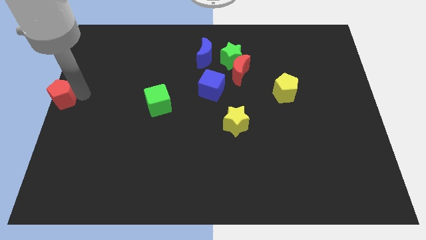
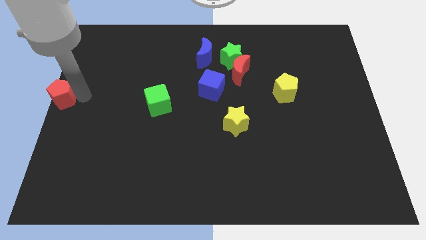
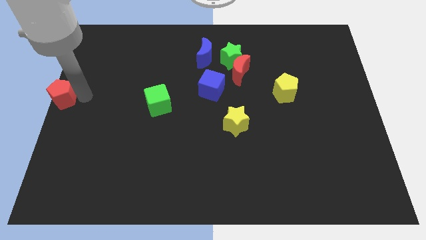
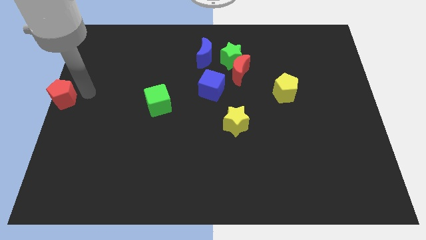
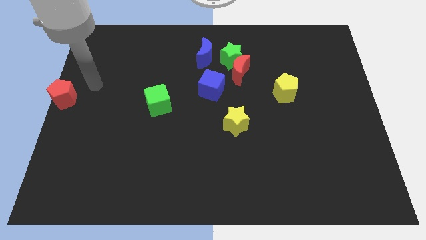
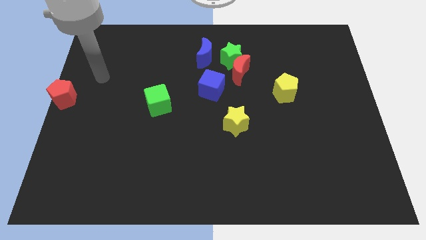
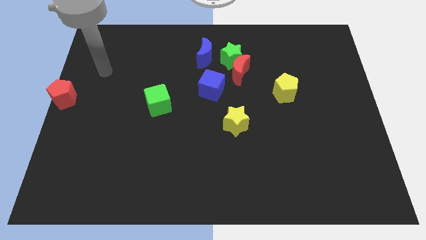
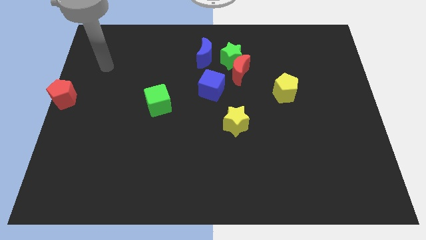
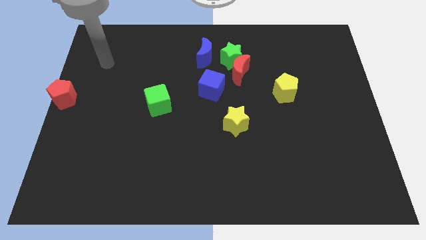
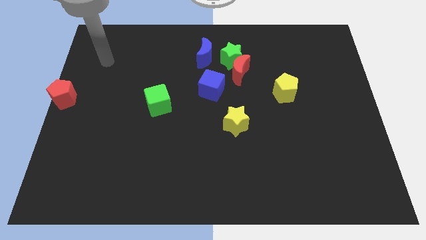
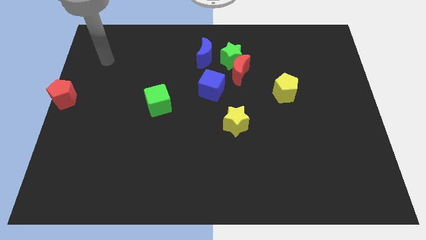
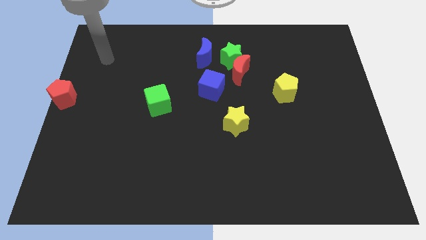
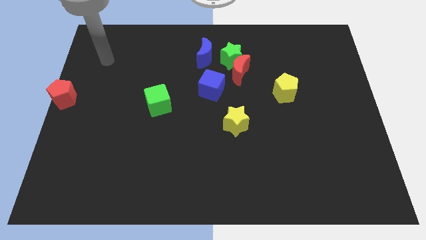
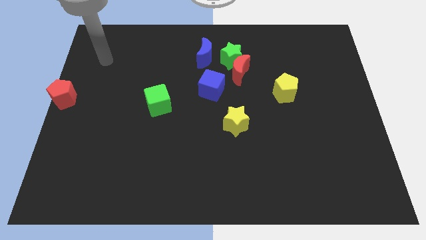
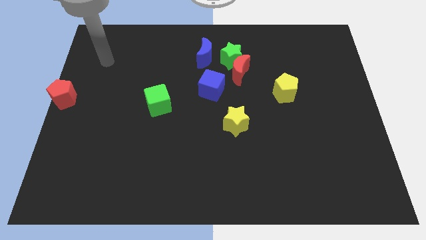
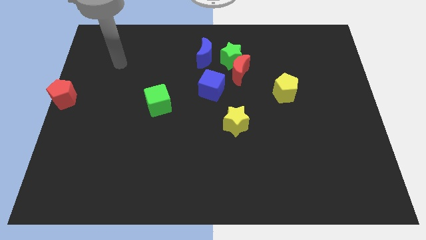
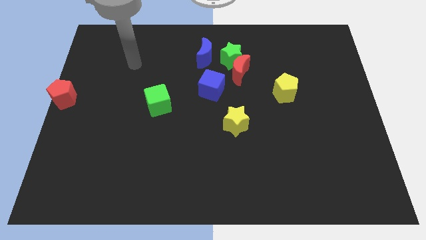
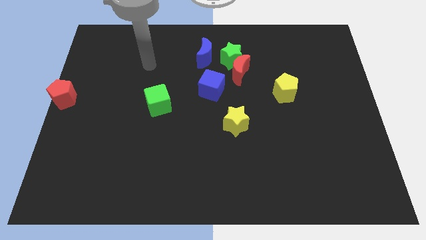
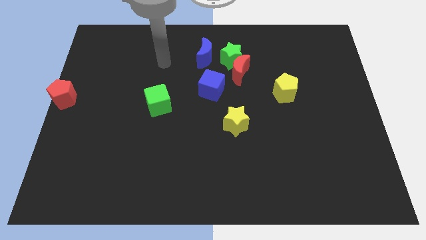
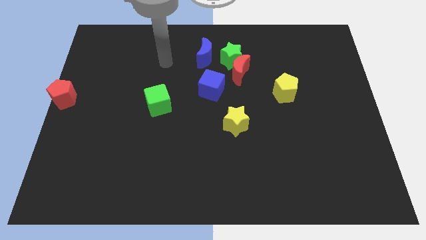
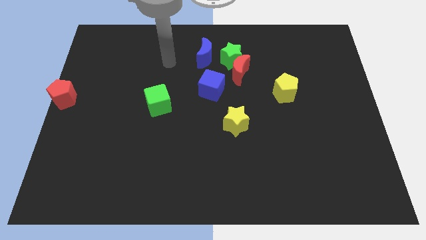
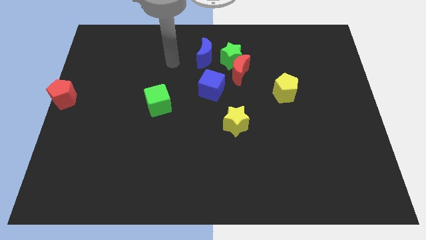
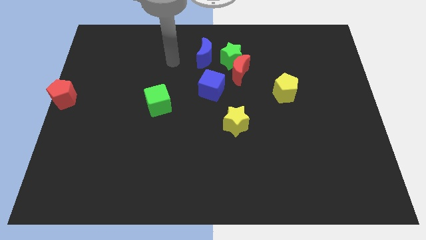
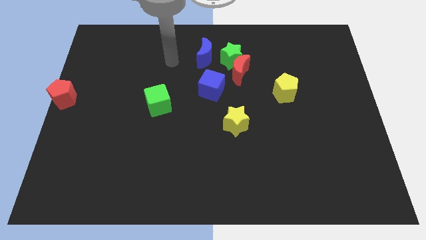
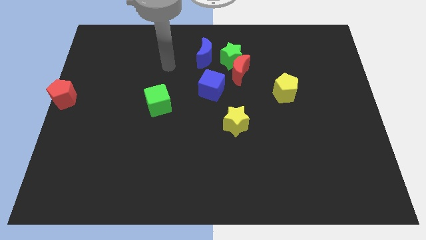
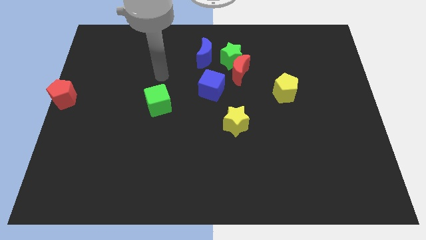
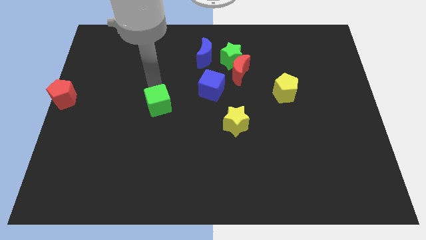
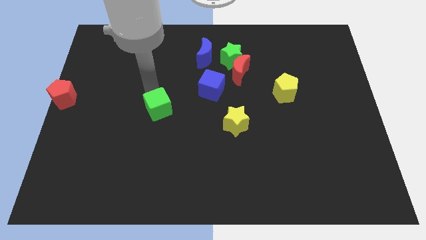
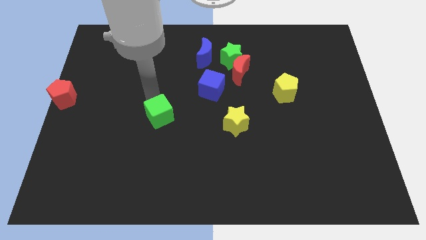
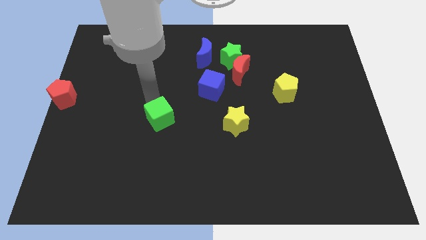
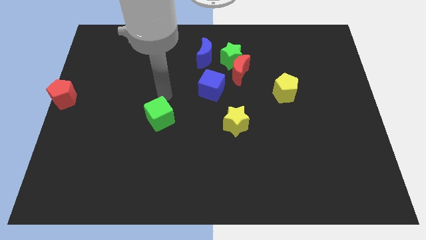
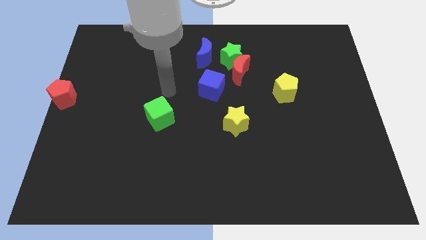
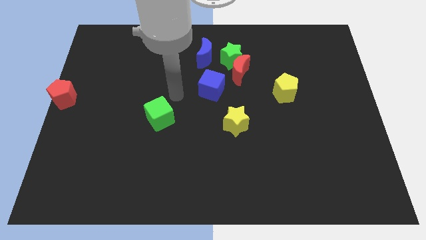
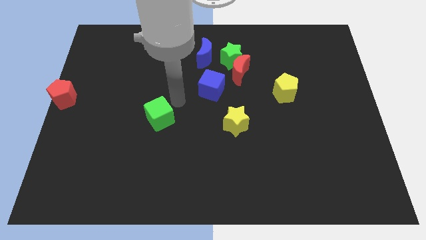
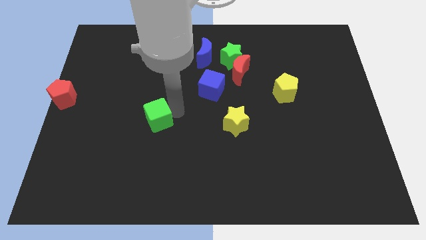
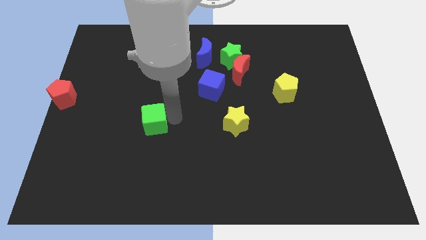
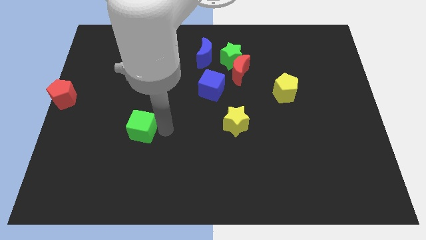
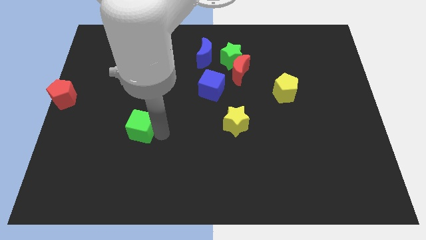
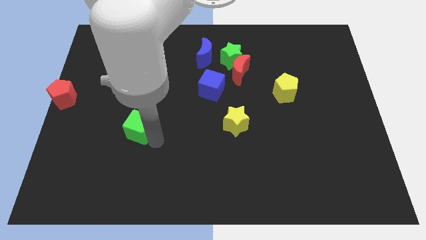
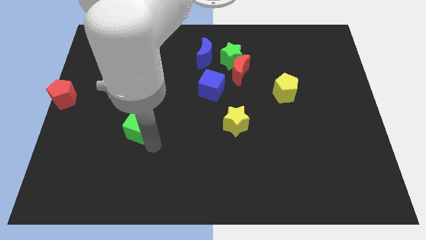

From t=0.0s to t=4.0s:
push the green cube towards the bottom side of the board

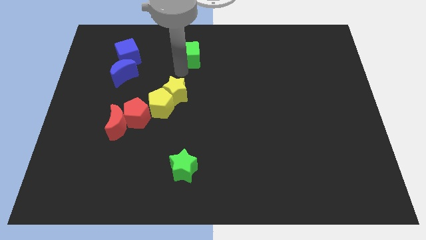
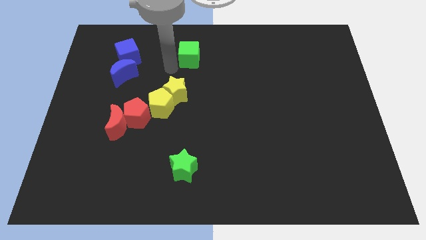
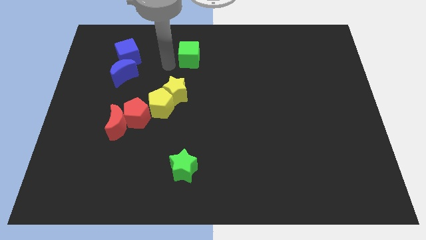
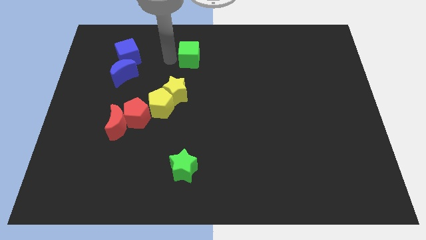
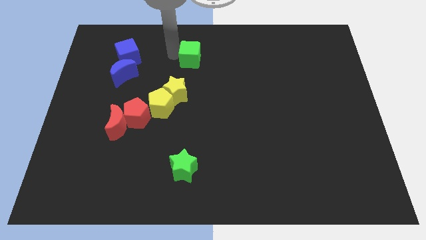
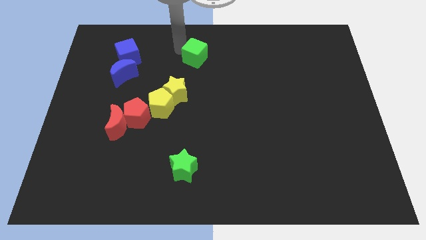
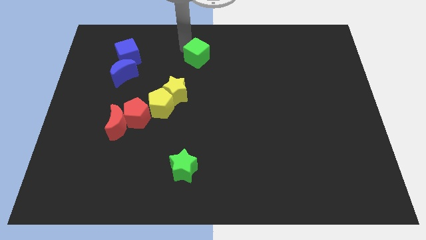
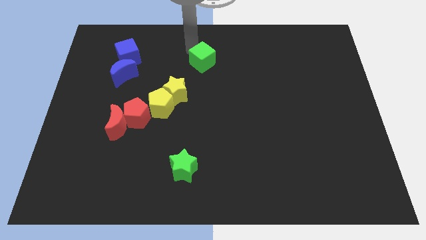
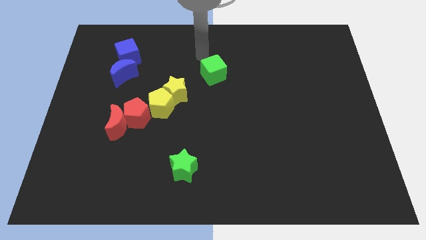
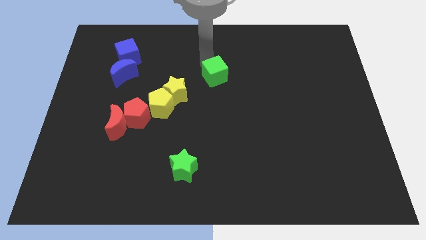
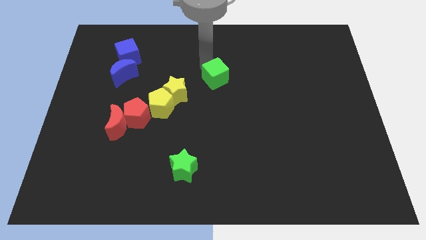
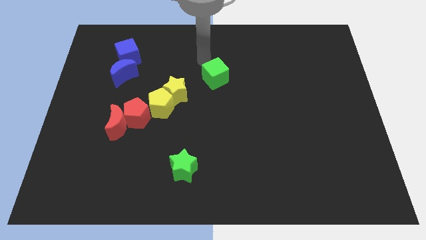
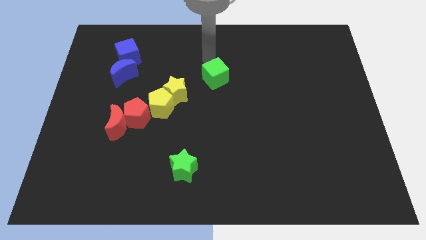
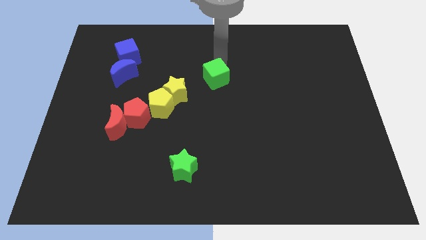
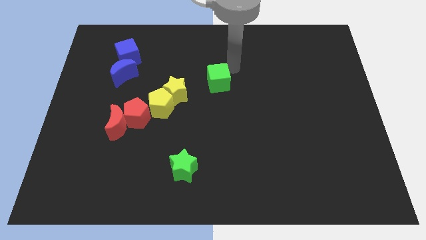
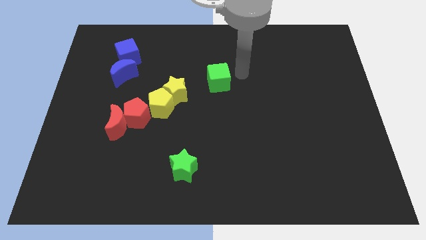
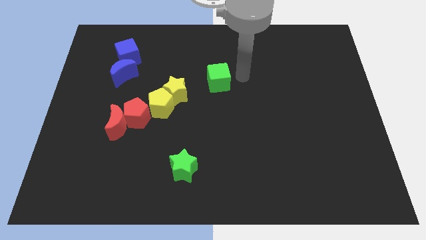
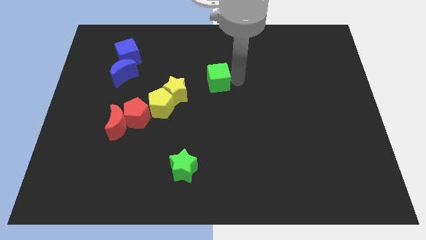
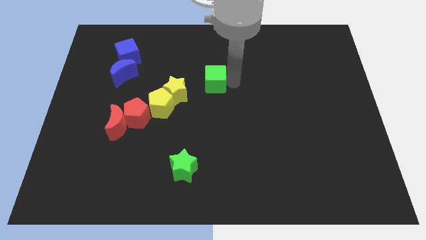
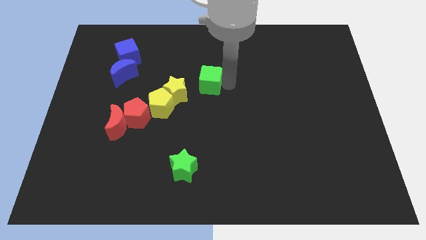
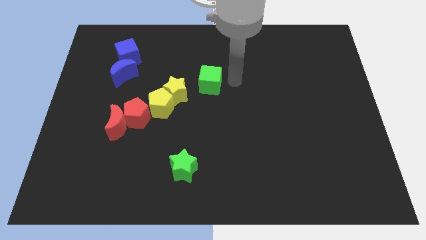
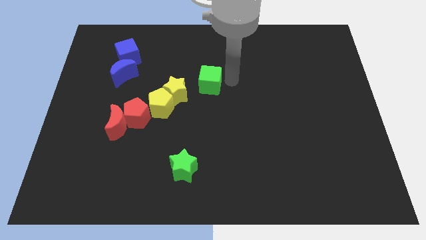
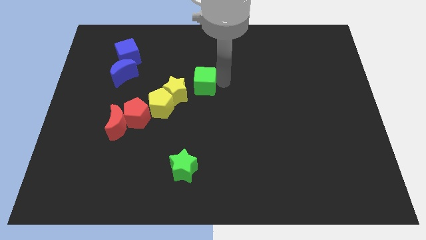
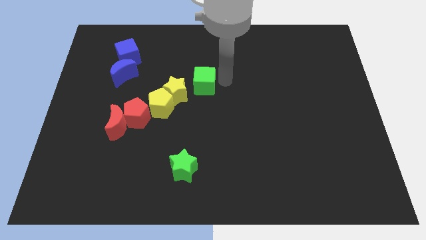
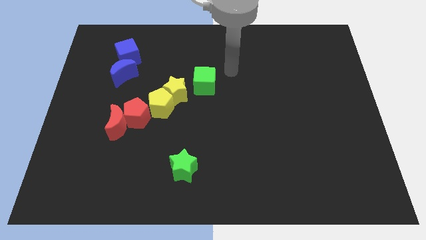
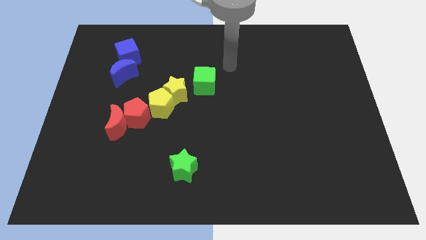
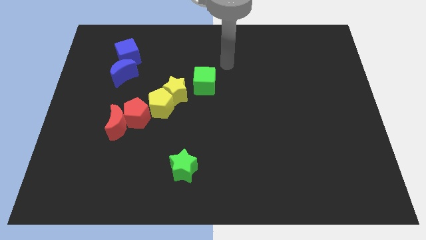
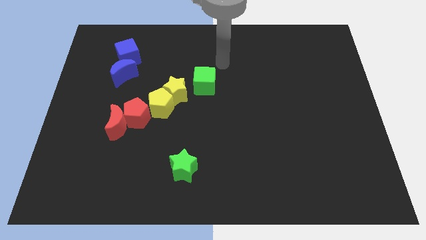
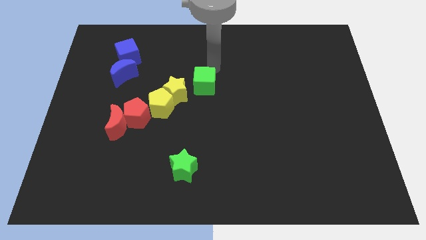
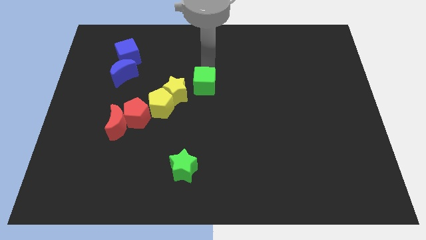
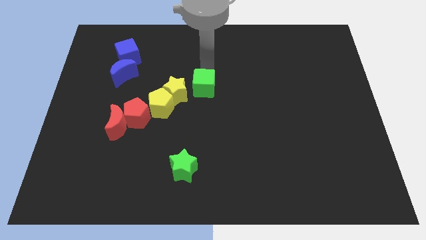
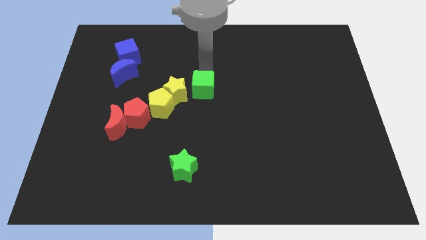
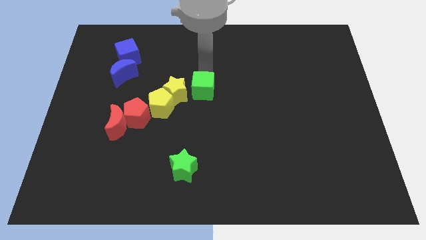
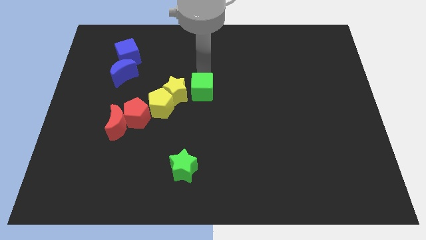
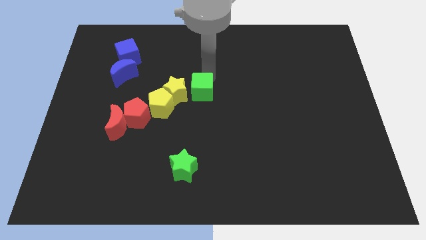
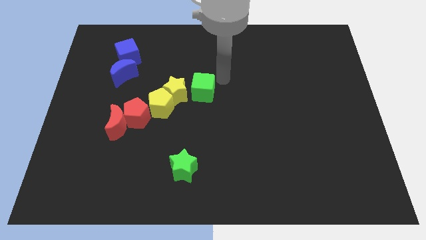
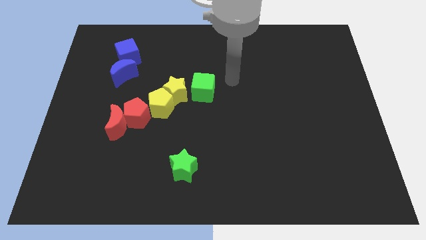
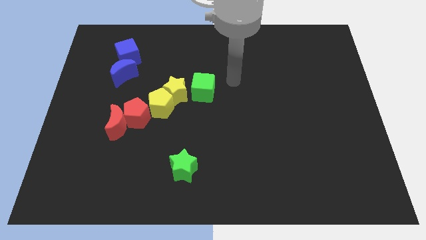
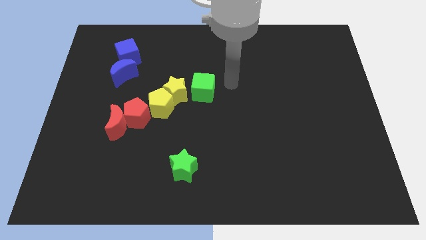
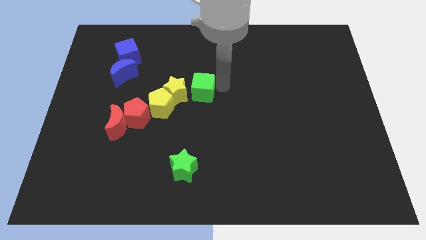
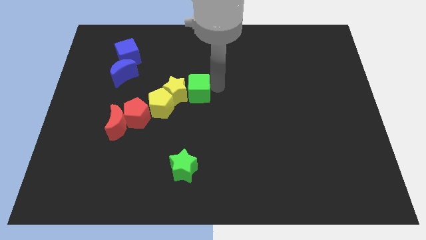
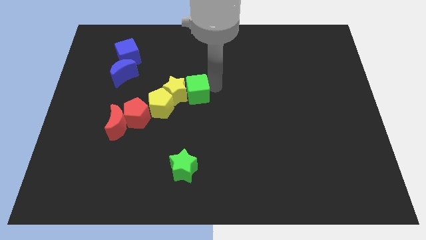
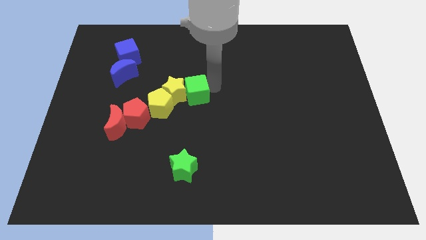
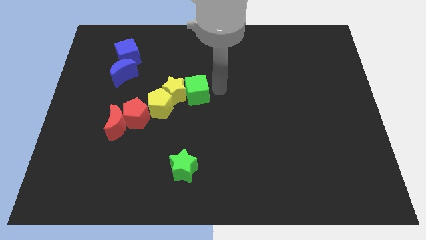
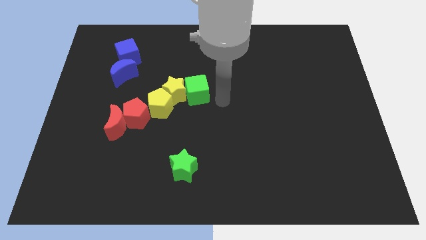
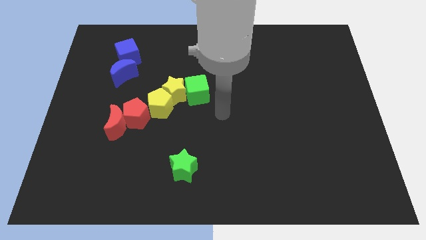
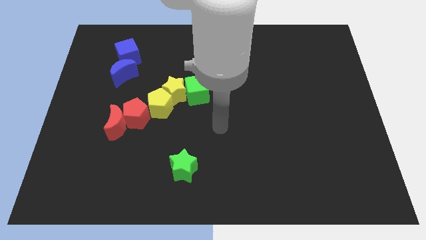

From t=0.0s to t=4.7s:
move the green cube into the right side of the yellow star

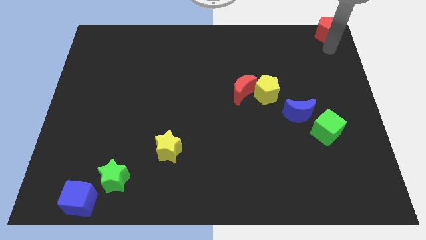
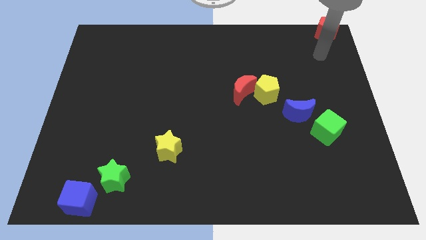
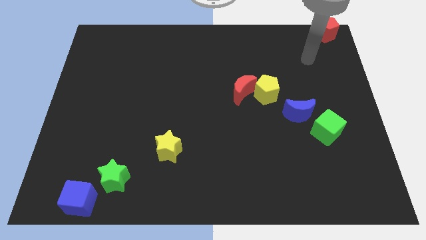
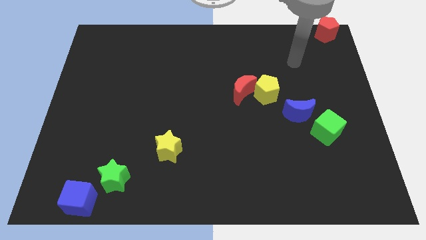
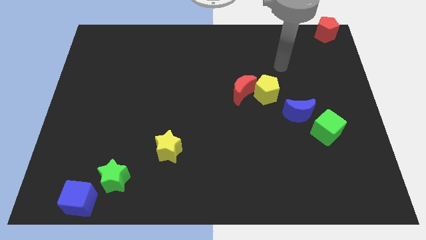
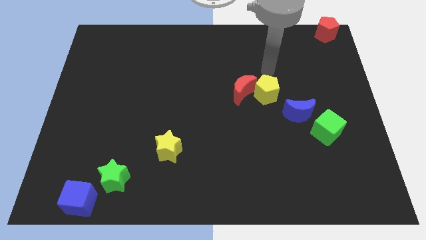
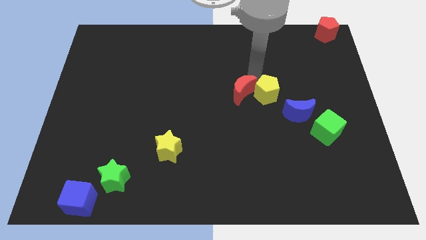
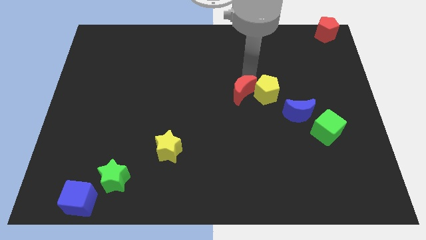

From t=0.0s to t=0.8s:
move your arm away from red pentagon
